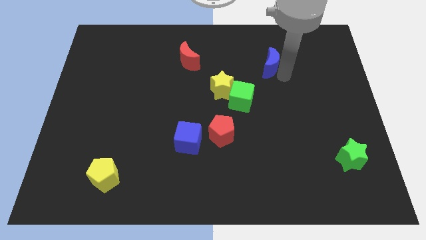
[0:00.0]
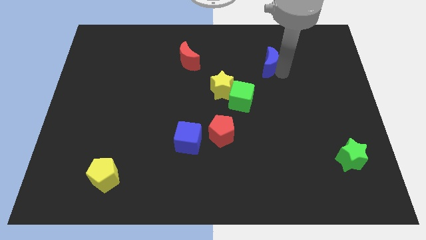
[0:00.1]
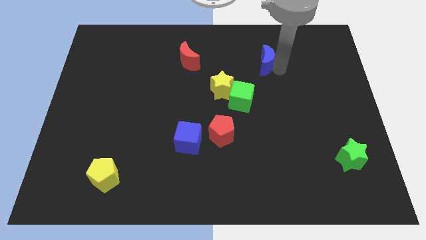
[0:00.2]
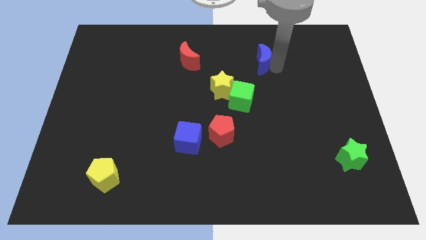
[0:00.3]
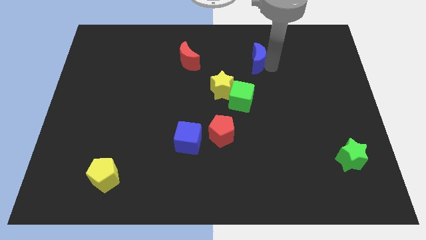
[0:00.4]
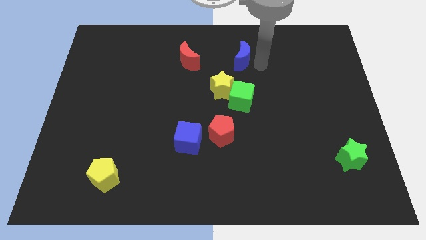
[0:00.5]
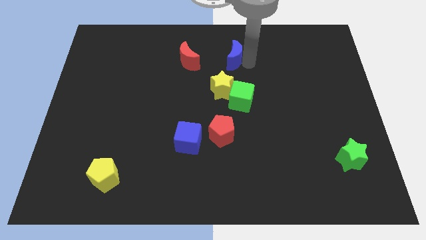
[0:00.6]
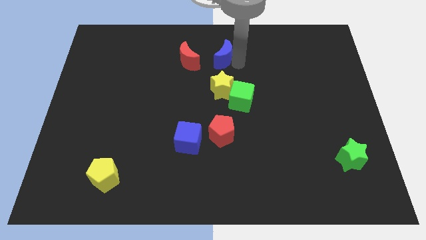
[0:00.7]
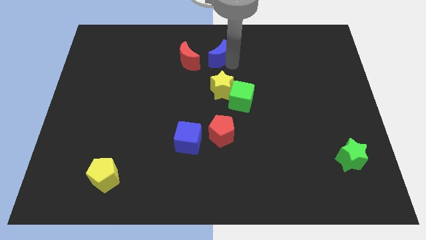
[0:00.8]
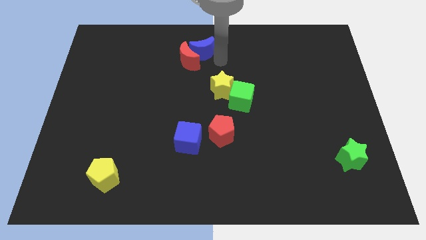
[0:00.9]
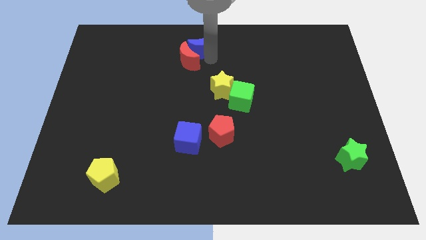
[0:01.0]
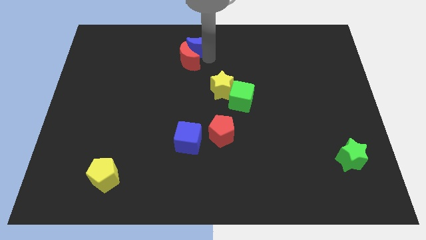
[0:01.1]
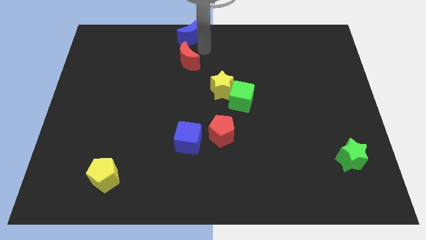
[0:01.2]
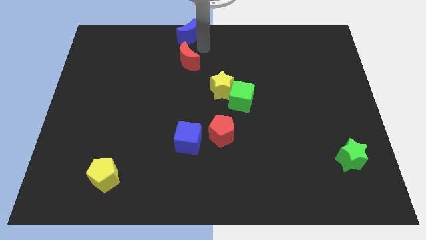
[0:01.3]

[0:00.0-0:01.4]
put the blue crescent at the top side of the red crescent

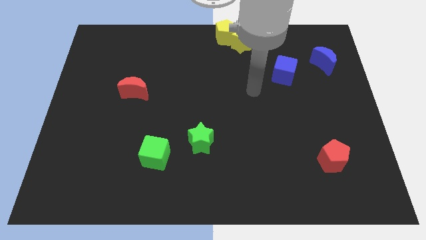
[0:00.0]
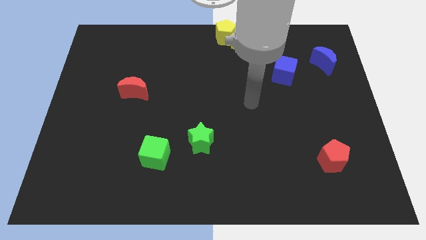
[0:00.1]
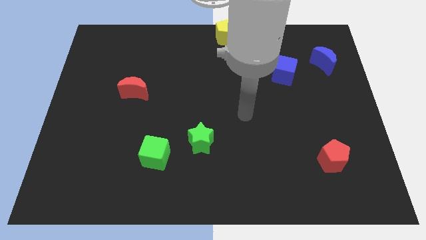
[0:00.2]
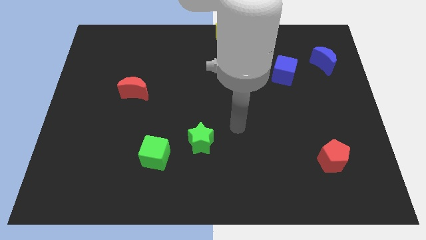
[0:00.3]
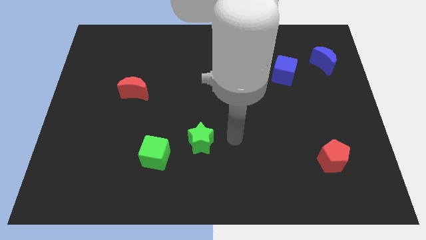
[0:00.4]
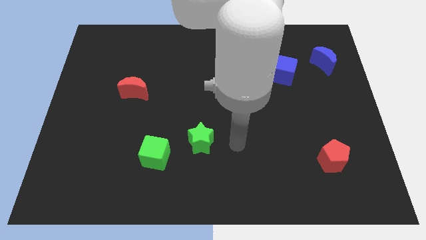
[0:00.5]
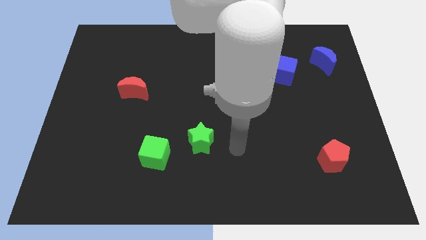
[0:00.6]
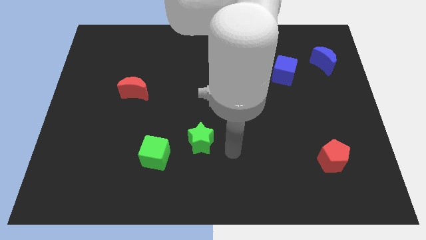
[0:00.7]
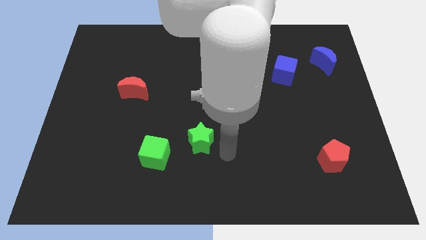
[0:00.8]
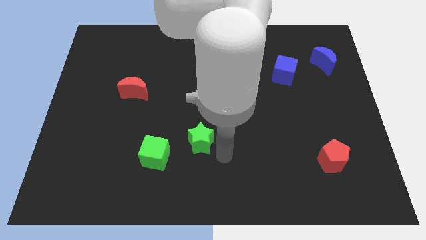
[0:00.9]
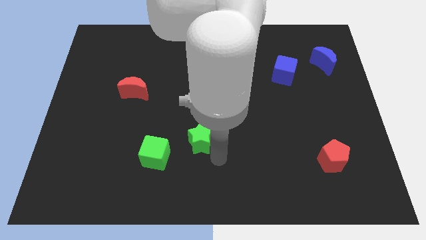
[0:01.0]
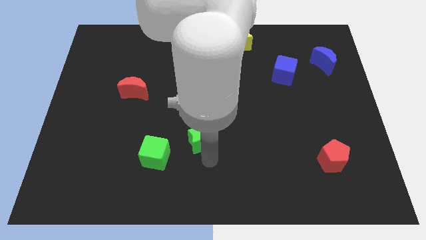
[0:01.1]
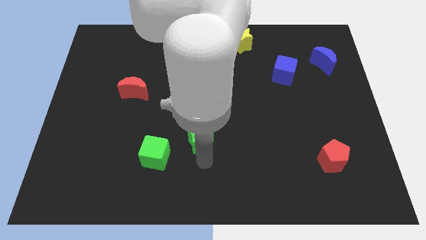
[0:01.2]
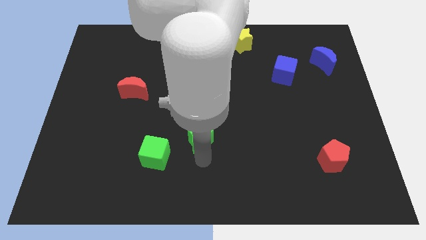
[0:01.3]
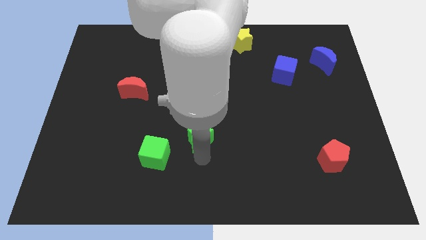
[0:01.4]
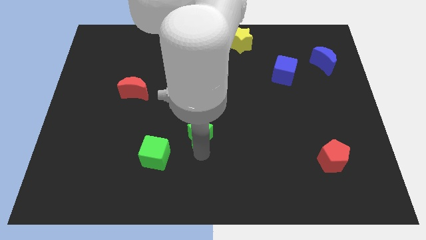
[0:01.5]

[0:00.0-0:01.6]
place the pointer to the bottom of the green star

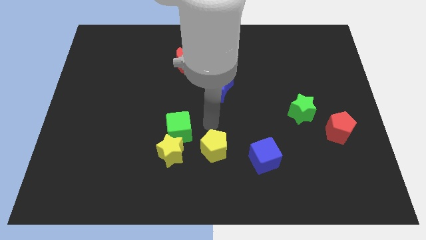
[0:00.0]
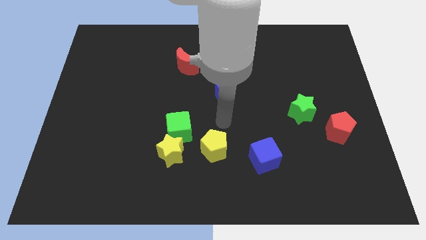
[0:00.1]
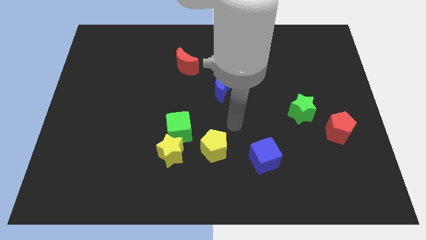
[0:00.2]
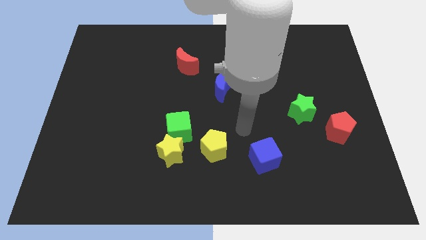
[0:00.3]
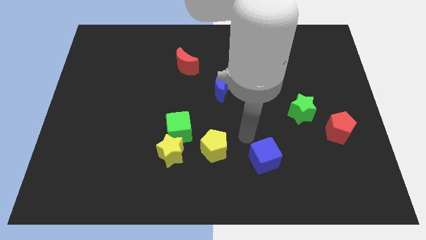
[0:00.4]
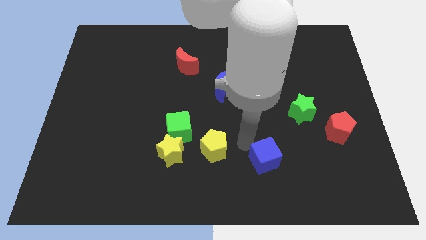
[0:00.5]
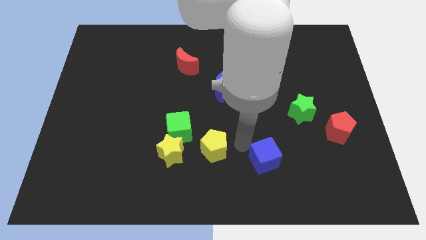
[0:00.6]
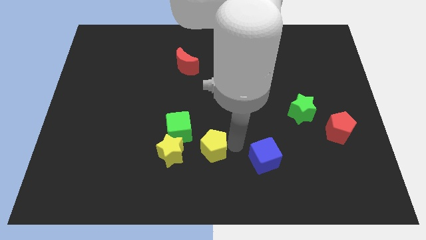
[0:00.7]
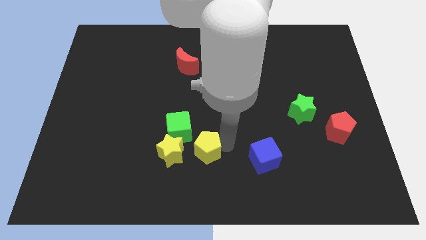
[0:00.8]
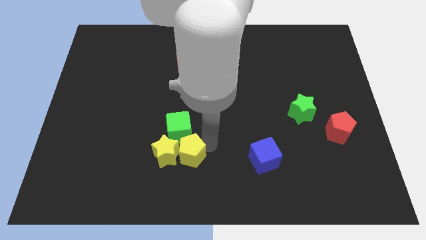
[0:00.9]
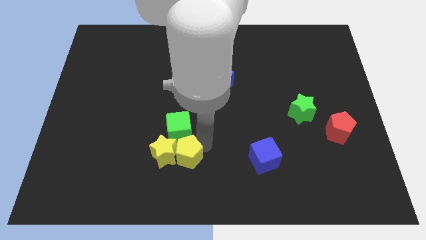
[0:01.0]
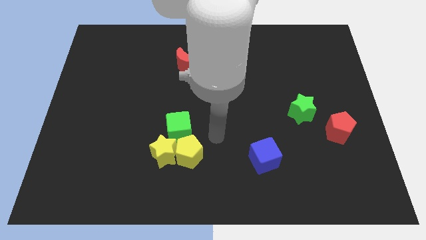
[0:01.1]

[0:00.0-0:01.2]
push the yellow pentagon into the right side of the yellow star

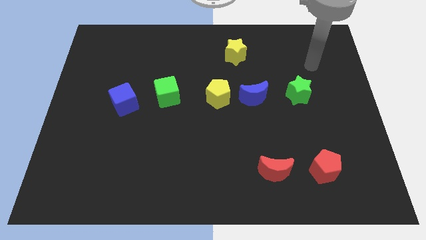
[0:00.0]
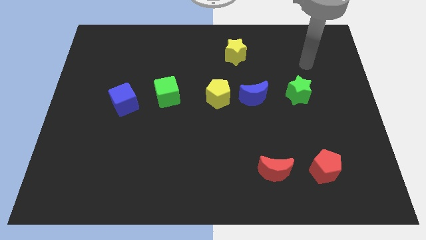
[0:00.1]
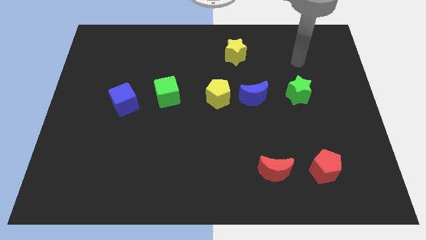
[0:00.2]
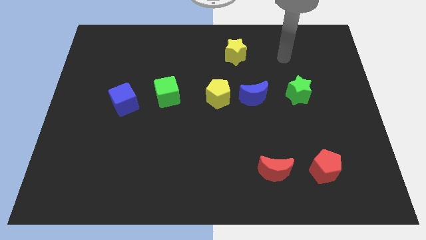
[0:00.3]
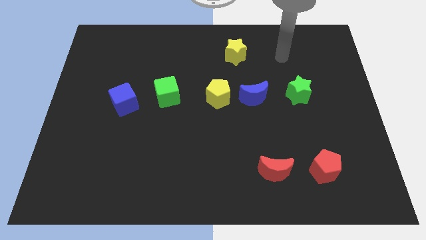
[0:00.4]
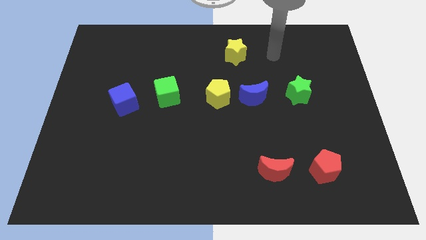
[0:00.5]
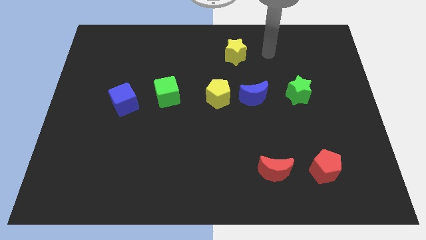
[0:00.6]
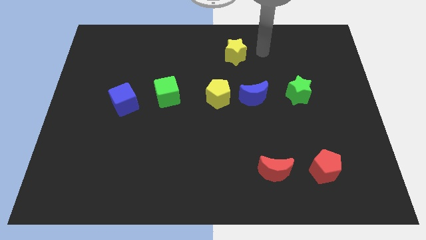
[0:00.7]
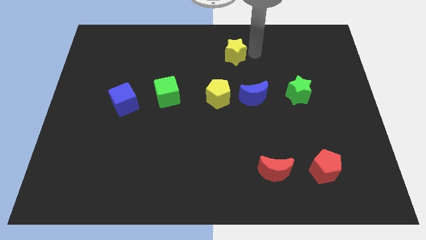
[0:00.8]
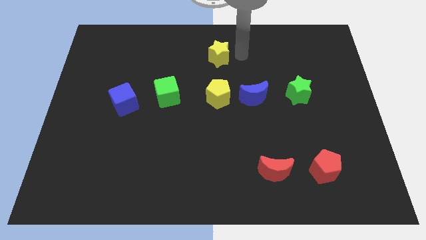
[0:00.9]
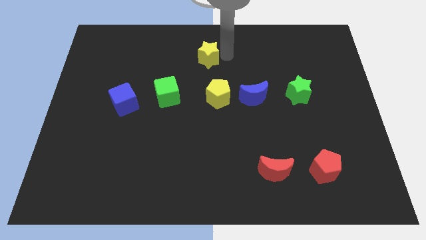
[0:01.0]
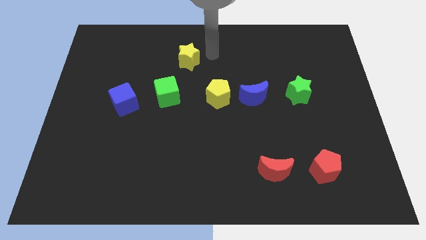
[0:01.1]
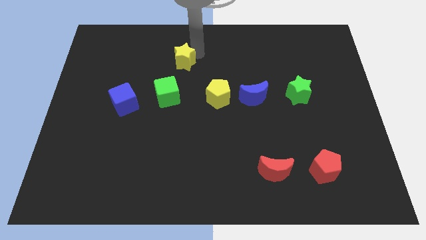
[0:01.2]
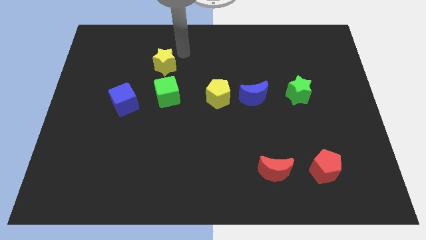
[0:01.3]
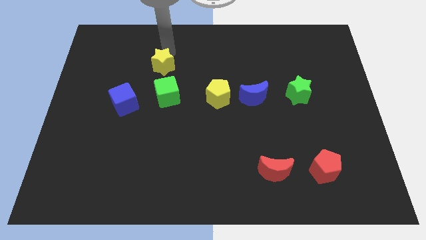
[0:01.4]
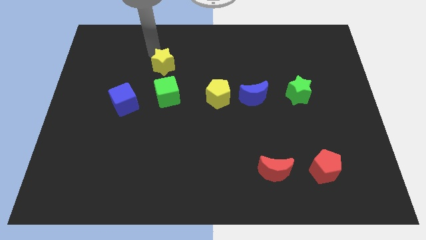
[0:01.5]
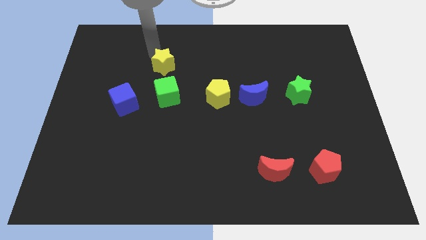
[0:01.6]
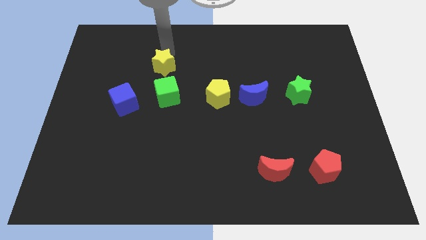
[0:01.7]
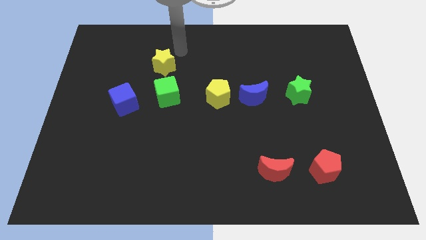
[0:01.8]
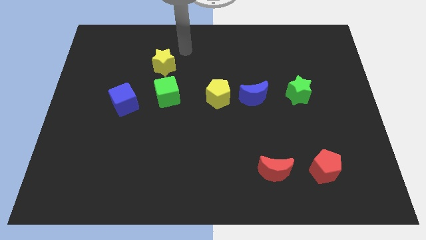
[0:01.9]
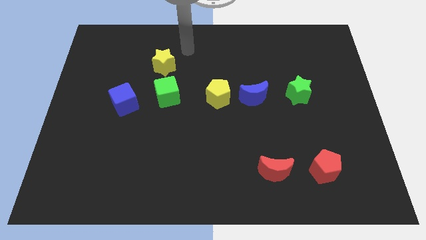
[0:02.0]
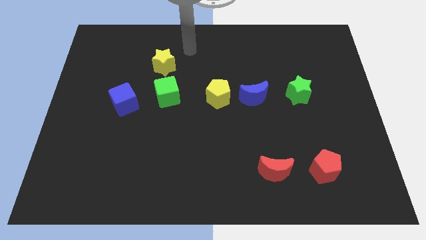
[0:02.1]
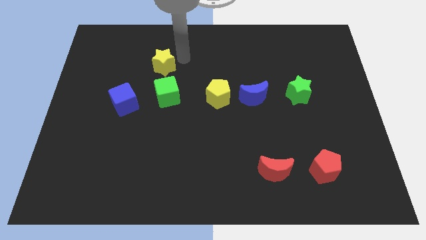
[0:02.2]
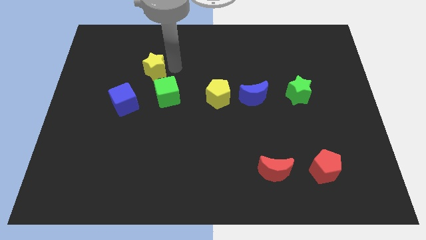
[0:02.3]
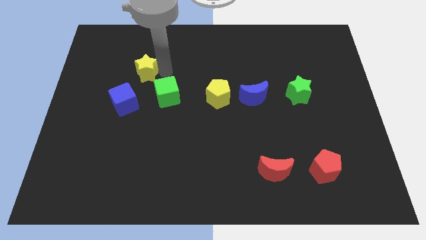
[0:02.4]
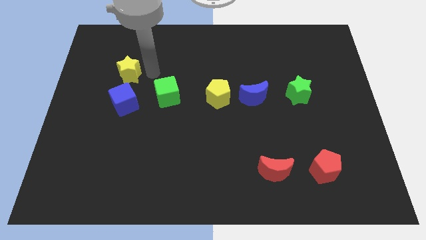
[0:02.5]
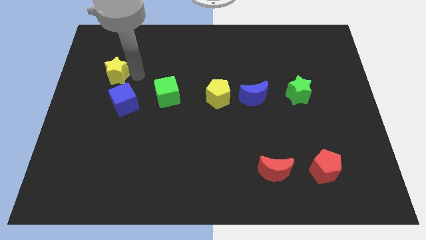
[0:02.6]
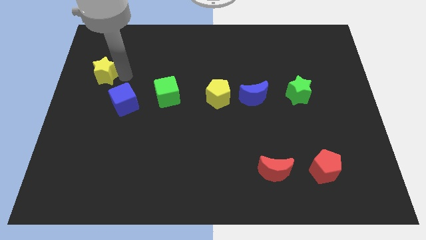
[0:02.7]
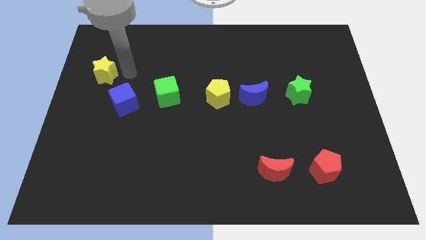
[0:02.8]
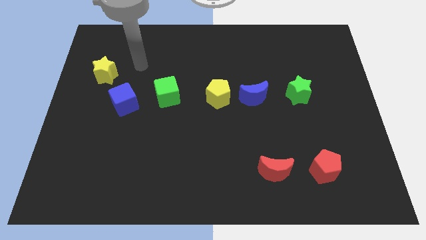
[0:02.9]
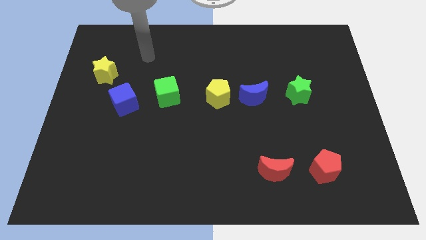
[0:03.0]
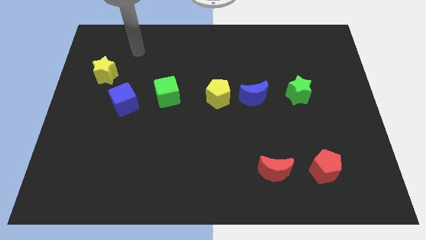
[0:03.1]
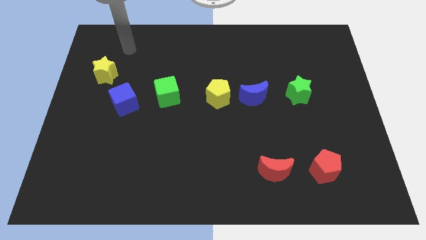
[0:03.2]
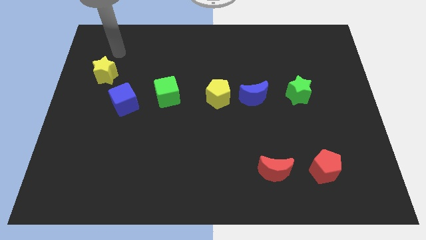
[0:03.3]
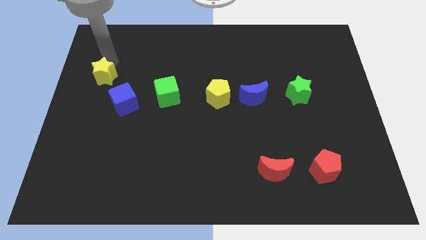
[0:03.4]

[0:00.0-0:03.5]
push the yellow star towards the blue cube

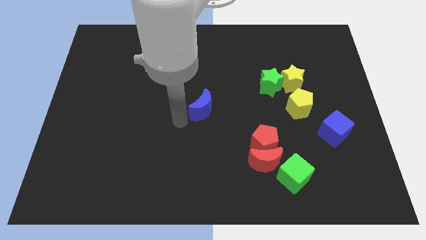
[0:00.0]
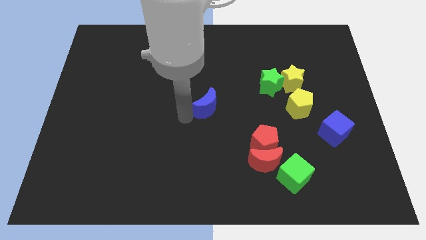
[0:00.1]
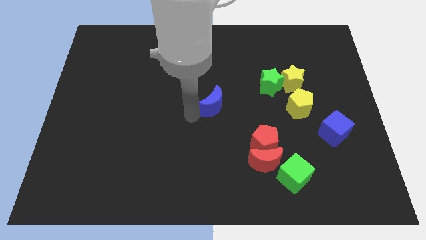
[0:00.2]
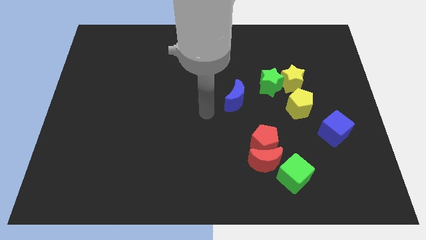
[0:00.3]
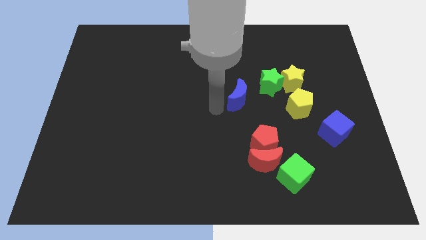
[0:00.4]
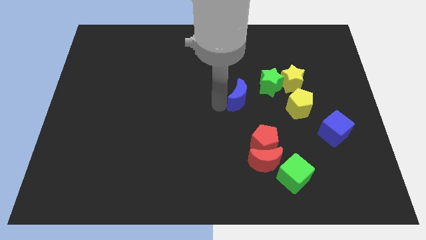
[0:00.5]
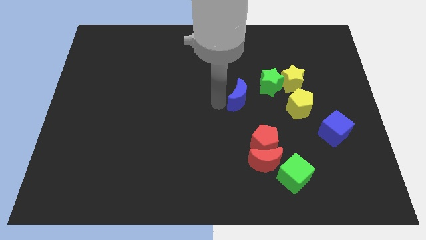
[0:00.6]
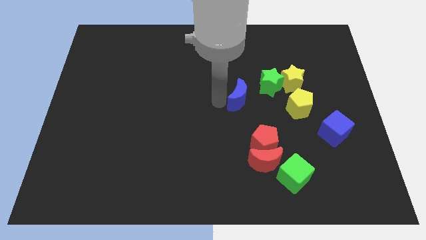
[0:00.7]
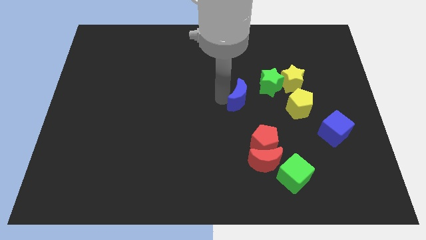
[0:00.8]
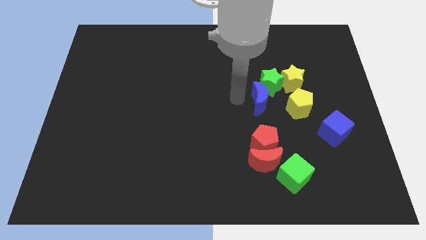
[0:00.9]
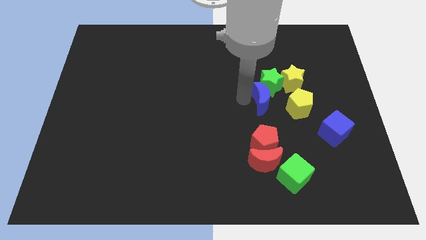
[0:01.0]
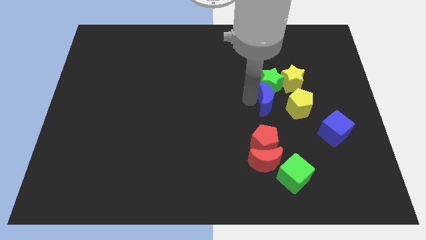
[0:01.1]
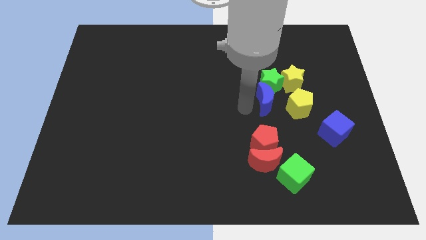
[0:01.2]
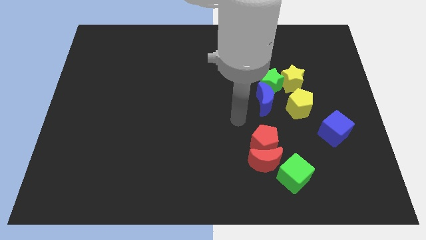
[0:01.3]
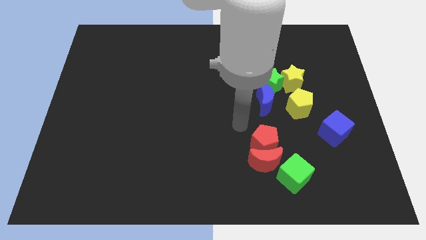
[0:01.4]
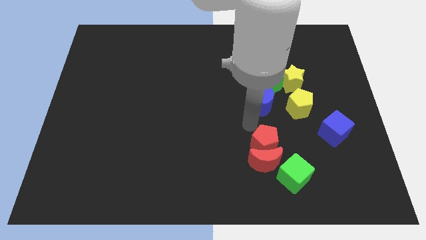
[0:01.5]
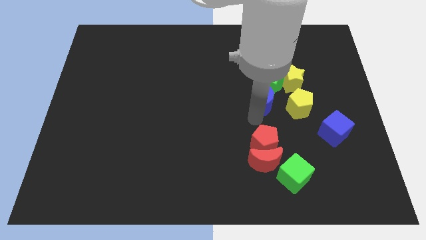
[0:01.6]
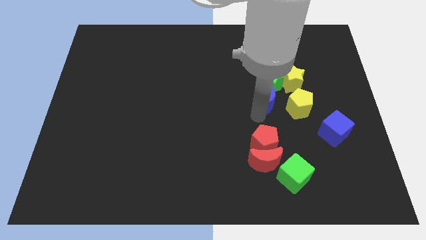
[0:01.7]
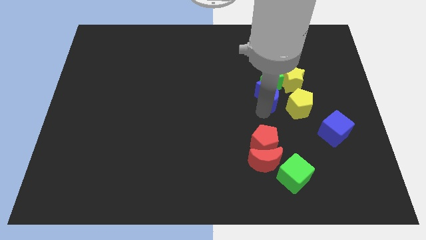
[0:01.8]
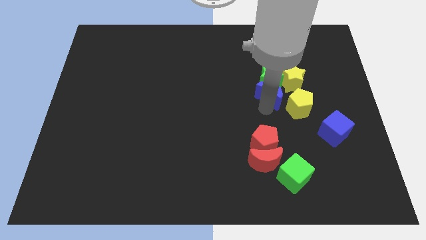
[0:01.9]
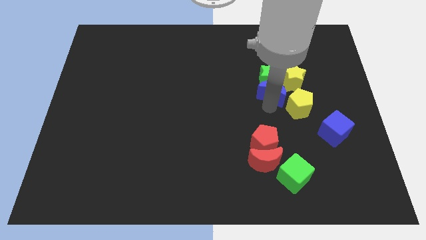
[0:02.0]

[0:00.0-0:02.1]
place blue moon below the green star
